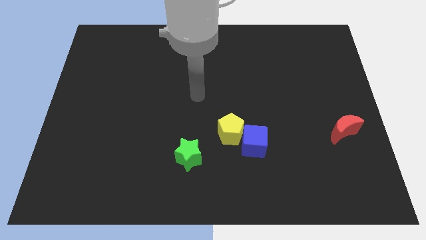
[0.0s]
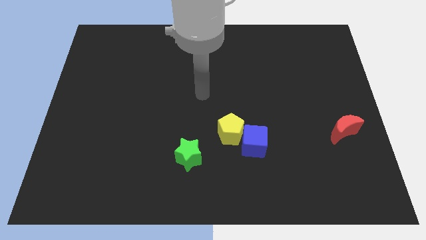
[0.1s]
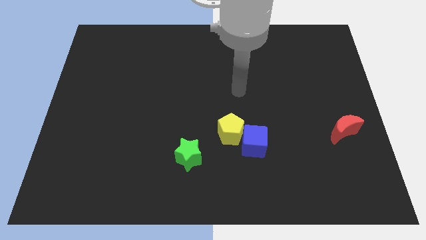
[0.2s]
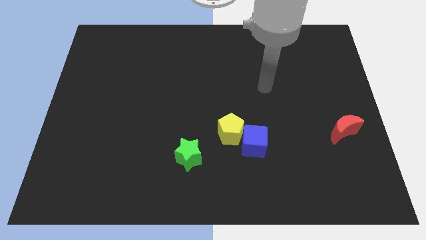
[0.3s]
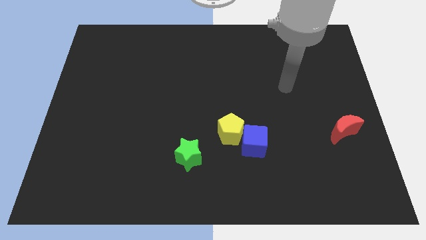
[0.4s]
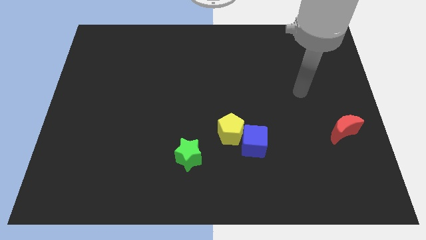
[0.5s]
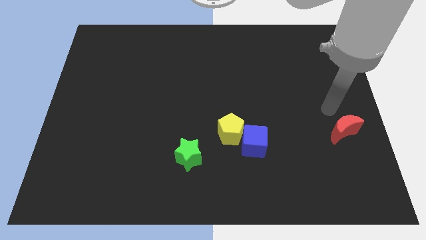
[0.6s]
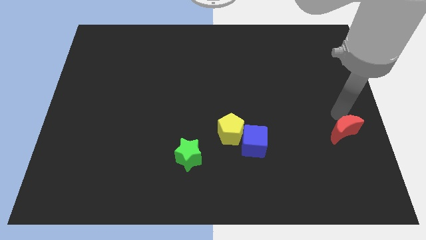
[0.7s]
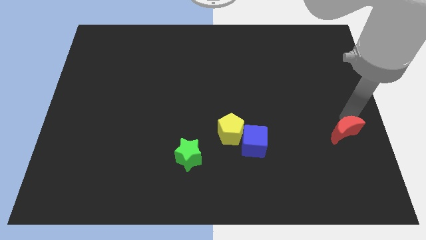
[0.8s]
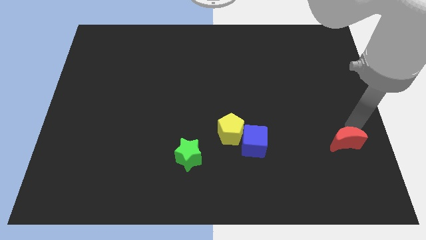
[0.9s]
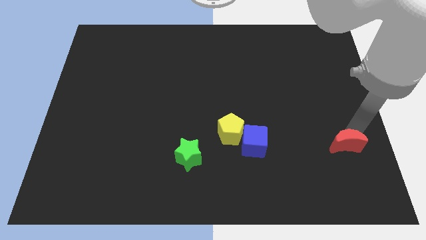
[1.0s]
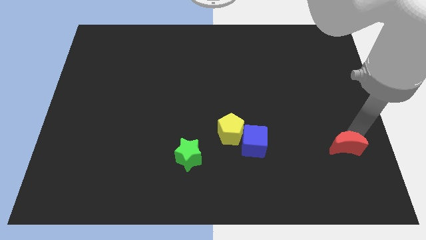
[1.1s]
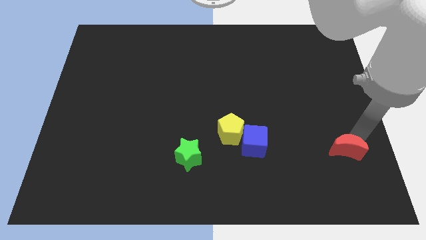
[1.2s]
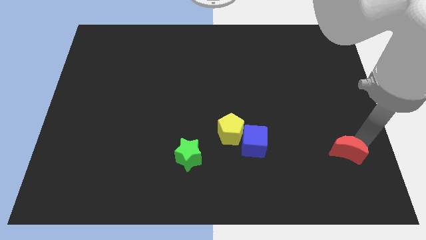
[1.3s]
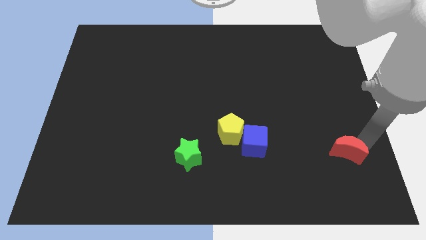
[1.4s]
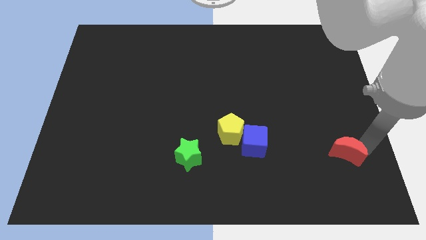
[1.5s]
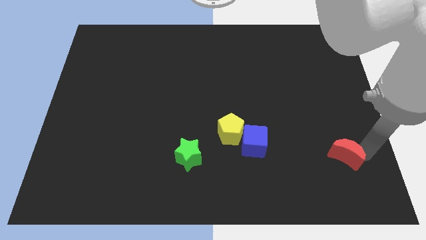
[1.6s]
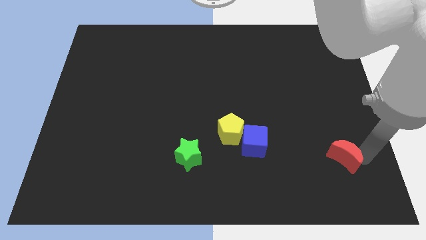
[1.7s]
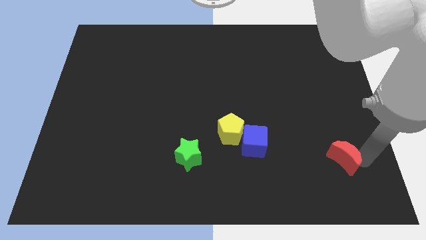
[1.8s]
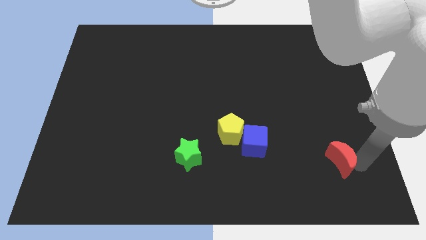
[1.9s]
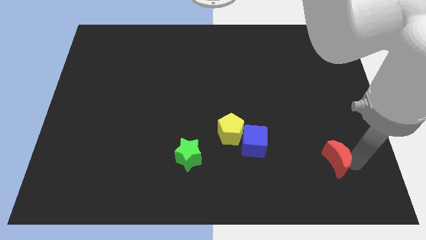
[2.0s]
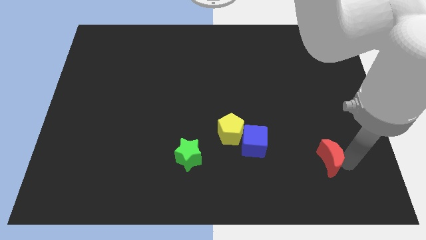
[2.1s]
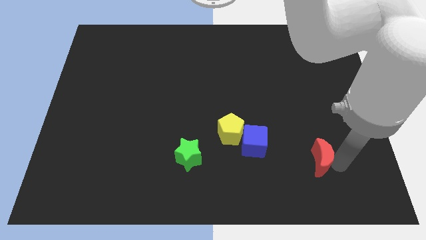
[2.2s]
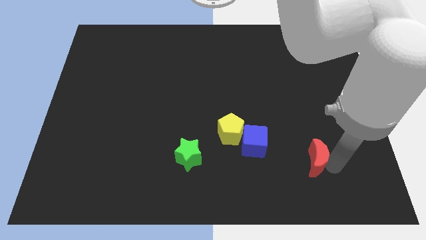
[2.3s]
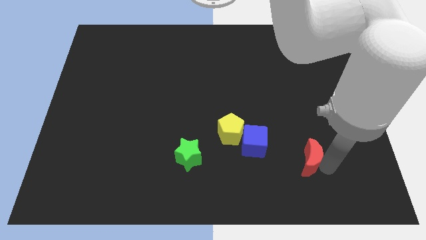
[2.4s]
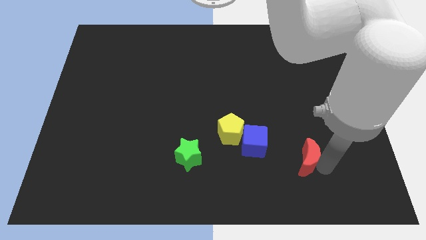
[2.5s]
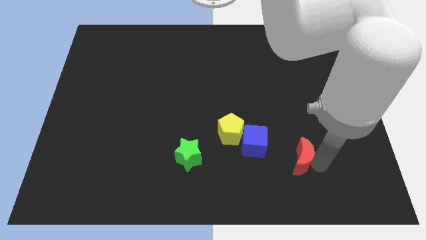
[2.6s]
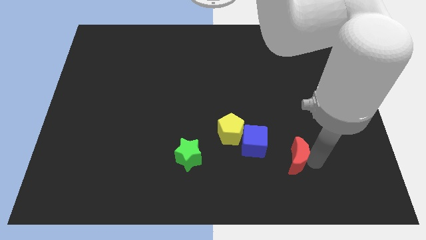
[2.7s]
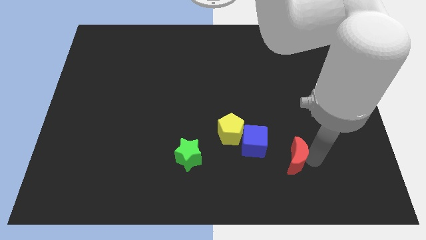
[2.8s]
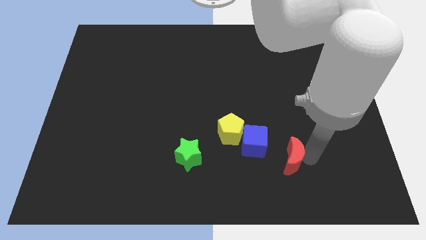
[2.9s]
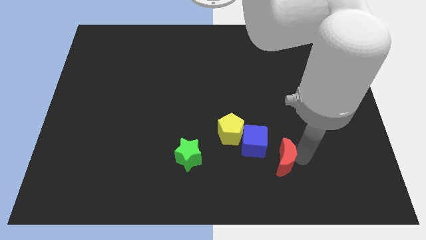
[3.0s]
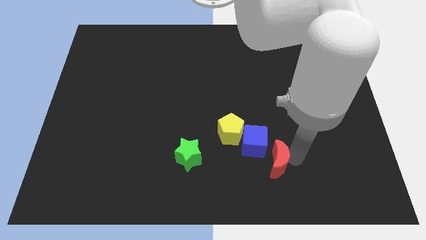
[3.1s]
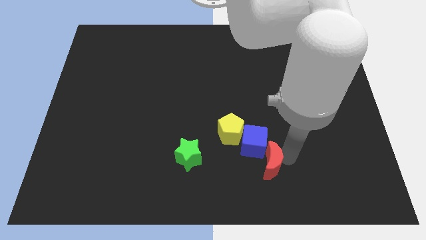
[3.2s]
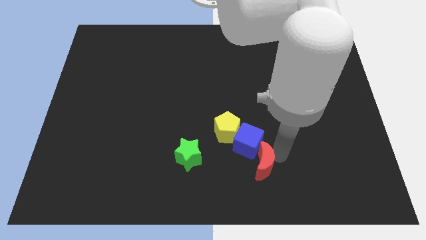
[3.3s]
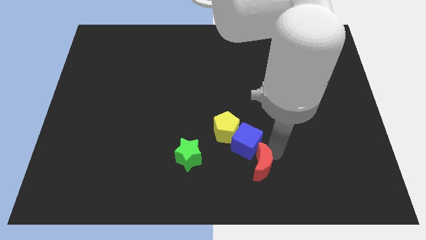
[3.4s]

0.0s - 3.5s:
move the red block close to the blue cube

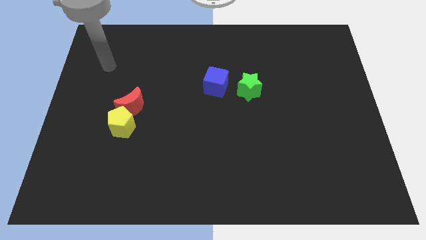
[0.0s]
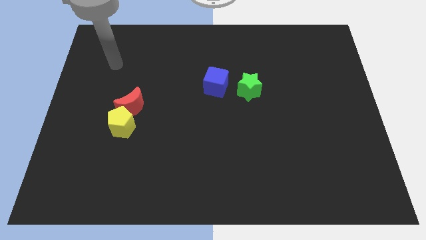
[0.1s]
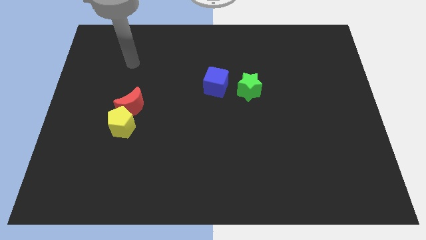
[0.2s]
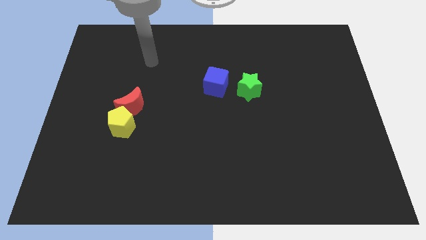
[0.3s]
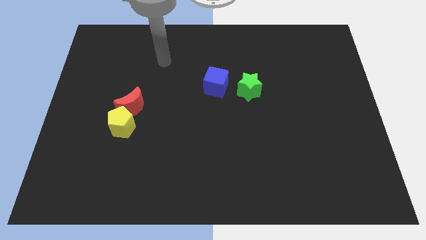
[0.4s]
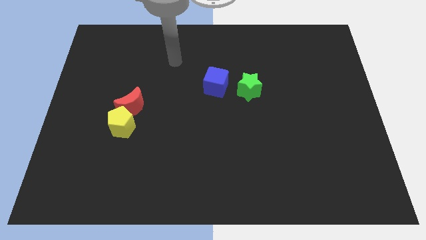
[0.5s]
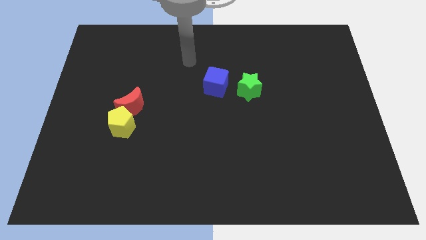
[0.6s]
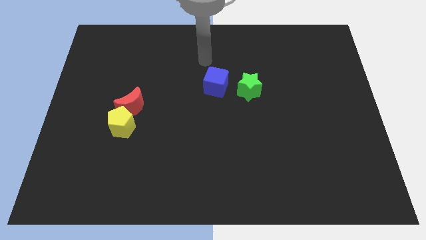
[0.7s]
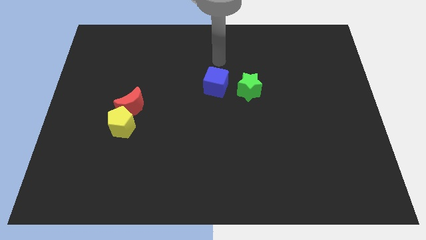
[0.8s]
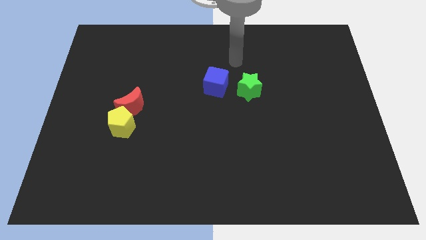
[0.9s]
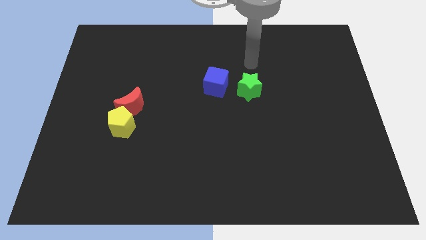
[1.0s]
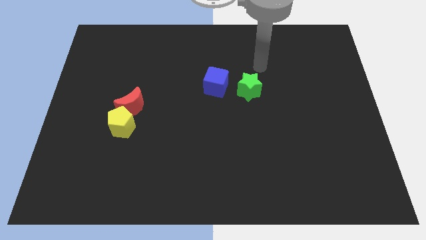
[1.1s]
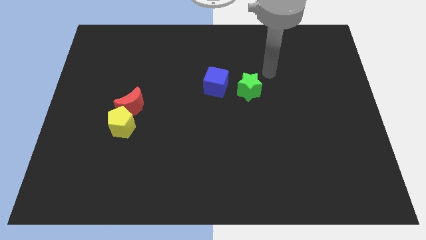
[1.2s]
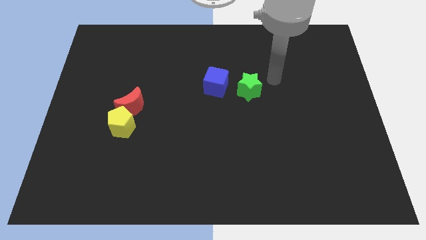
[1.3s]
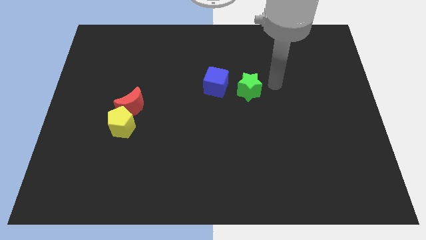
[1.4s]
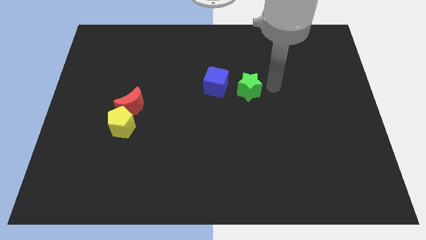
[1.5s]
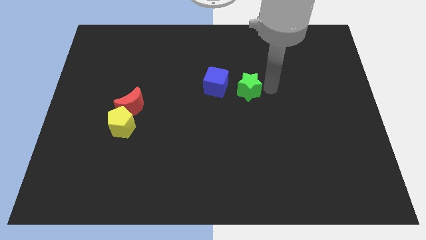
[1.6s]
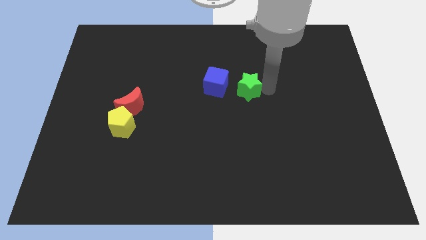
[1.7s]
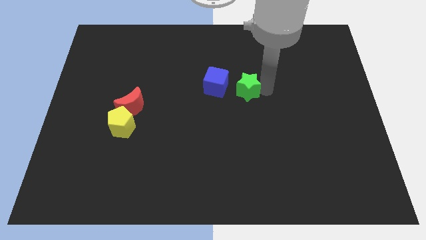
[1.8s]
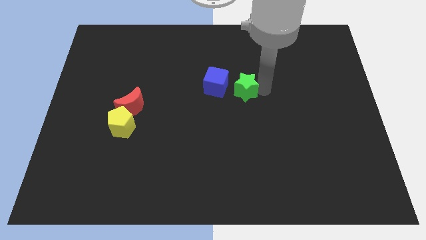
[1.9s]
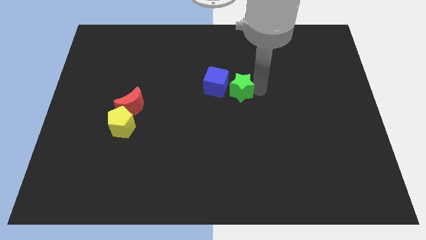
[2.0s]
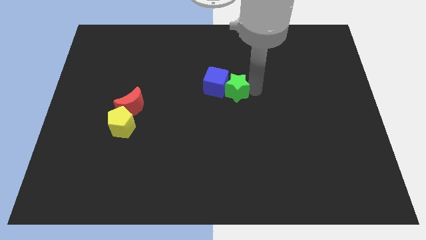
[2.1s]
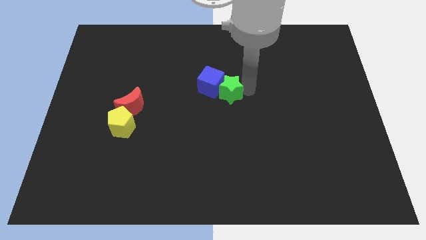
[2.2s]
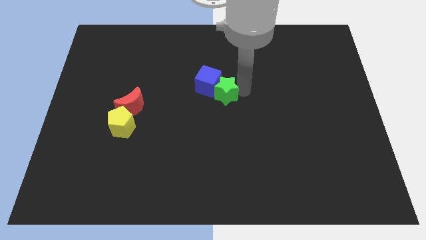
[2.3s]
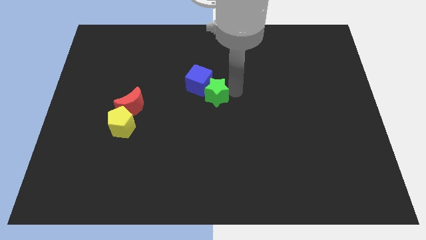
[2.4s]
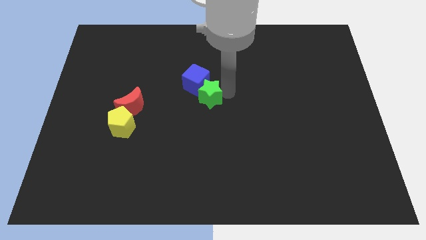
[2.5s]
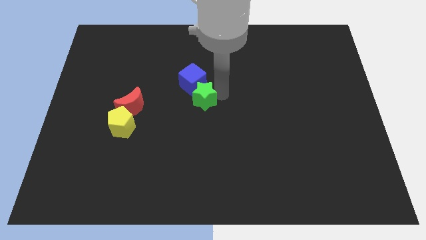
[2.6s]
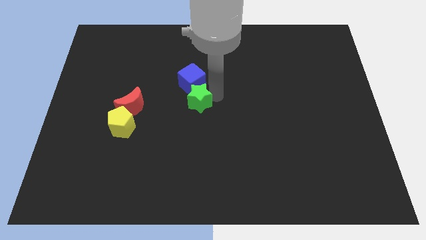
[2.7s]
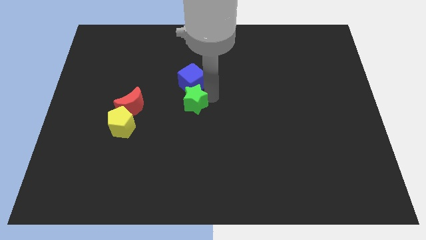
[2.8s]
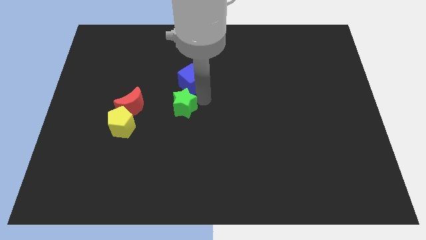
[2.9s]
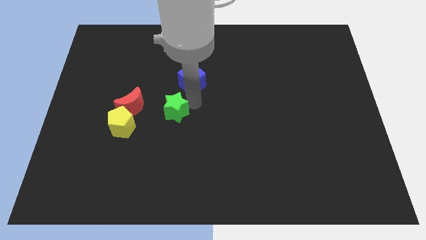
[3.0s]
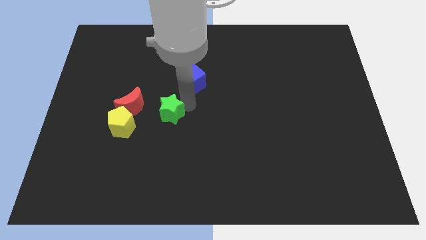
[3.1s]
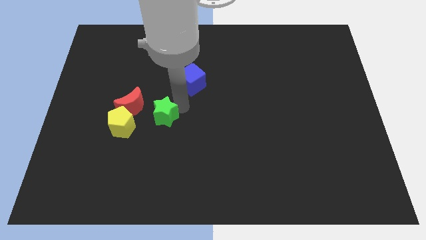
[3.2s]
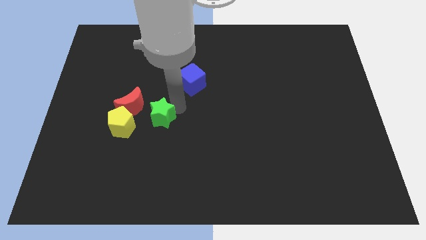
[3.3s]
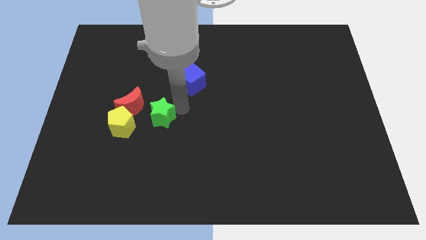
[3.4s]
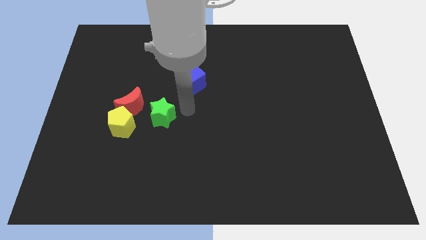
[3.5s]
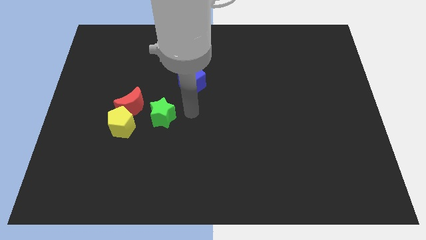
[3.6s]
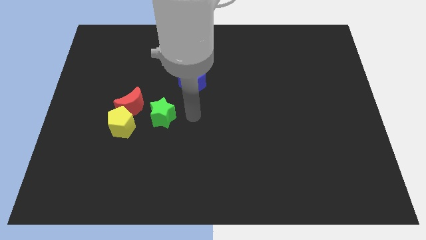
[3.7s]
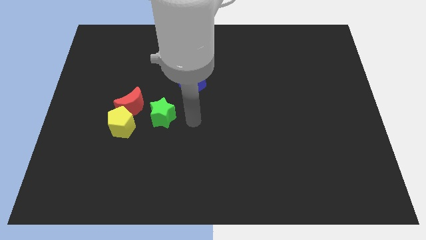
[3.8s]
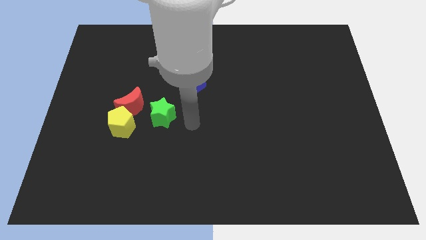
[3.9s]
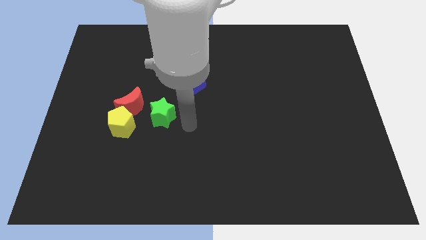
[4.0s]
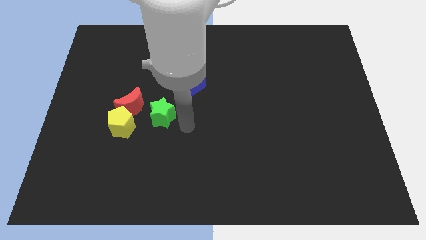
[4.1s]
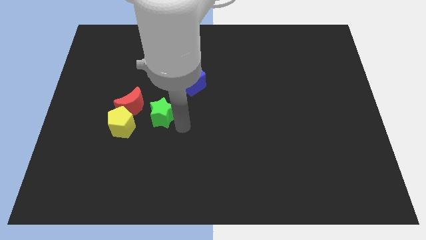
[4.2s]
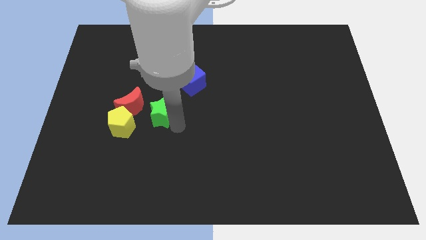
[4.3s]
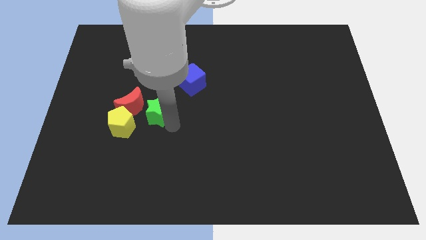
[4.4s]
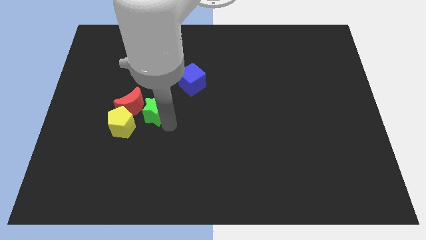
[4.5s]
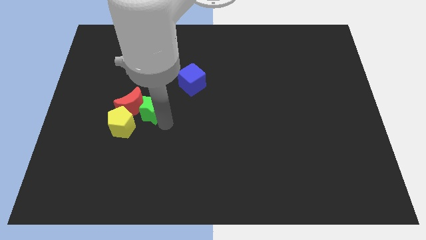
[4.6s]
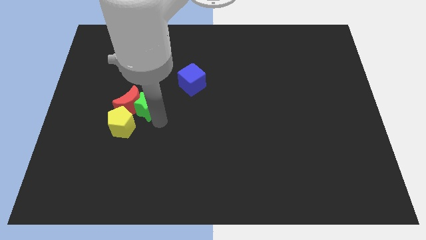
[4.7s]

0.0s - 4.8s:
slide the star to the red moon
